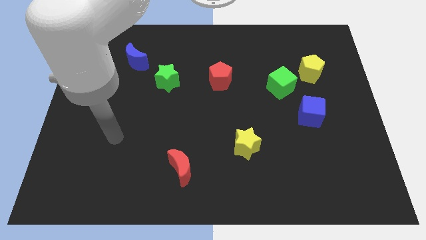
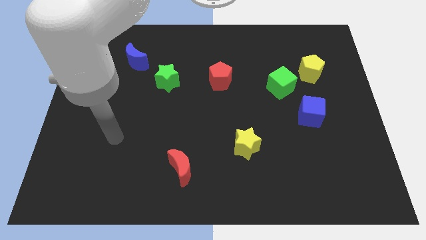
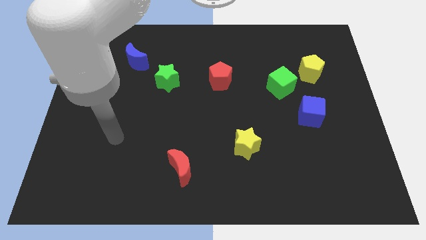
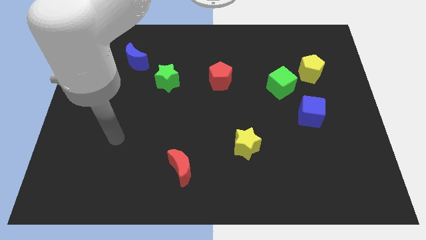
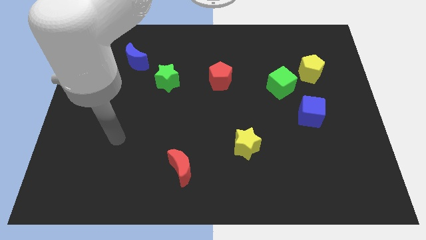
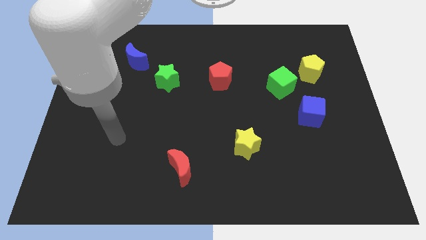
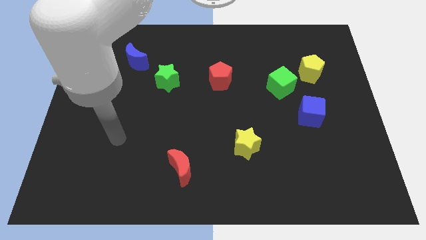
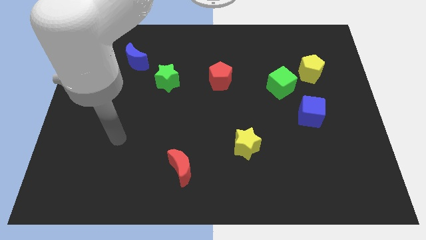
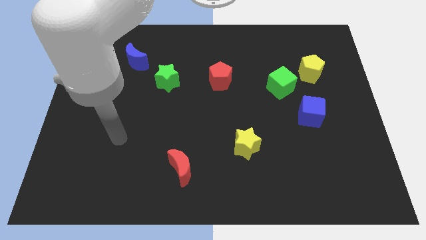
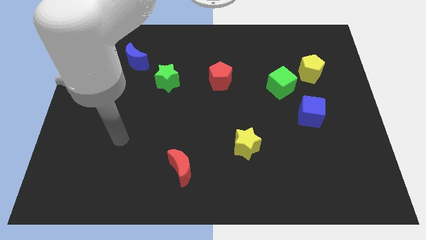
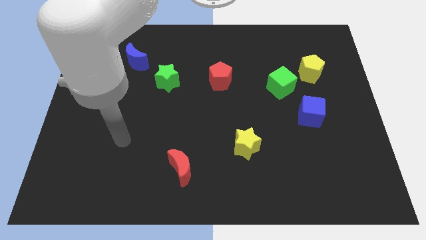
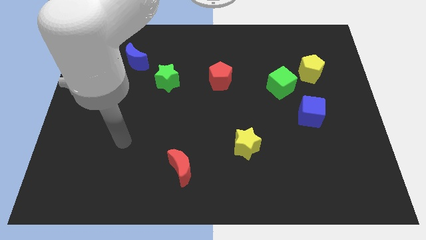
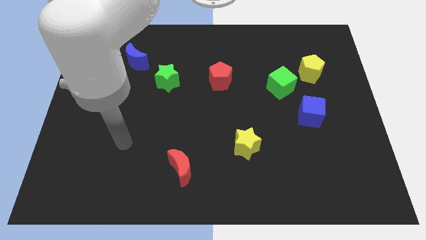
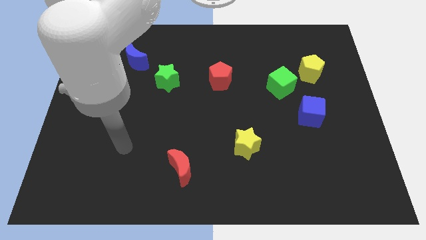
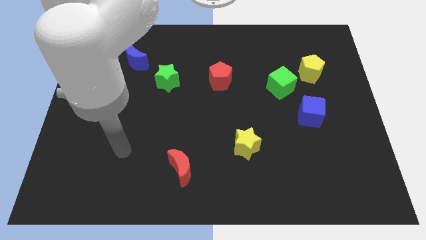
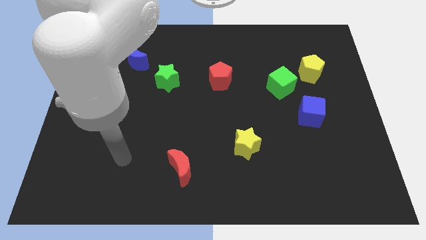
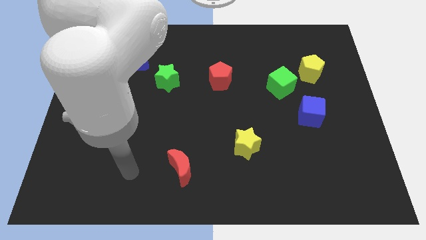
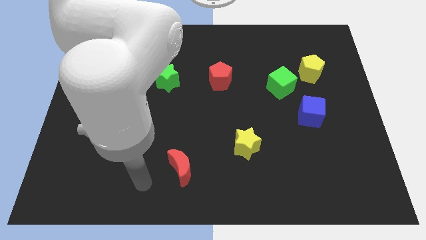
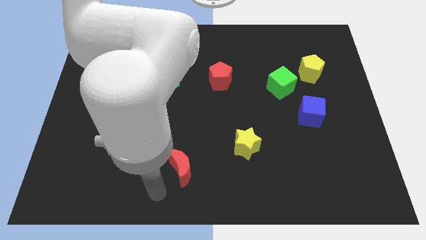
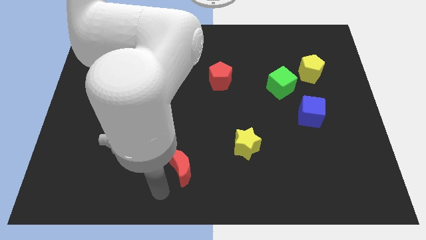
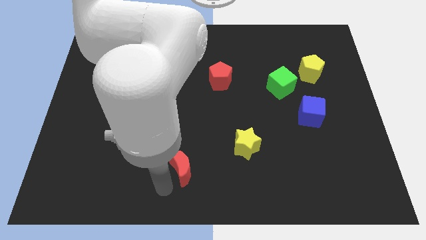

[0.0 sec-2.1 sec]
move your hand to the left of the red moon

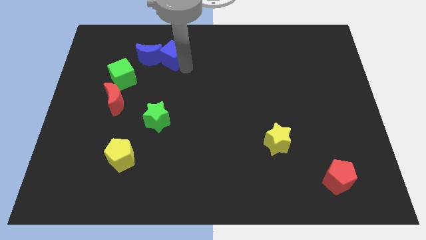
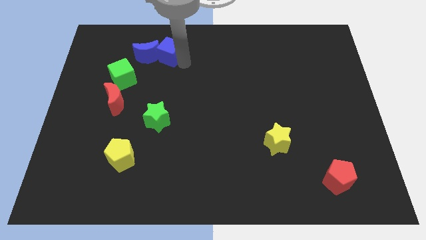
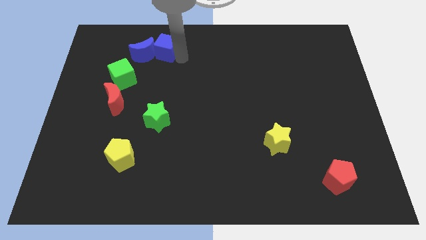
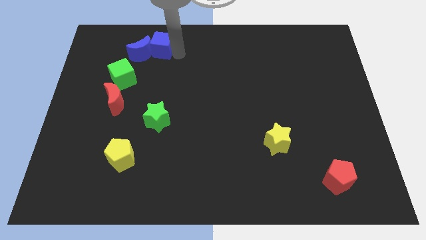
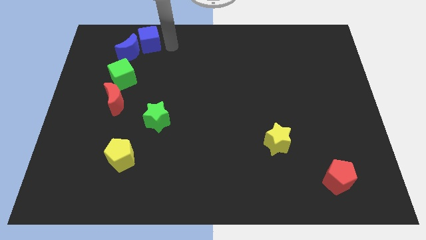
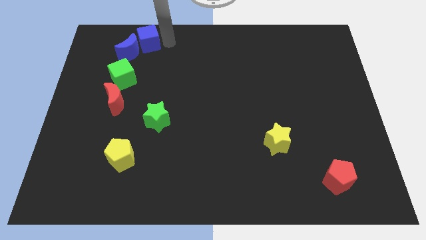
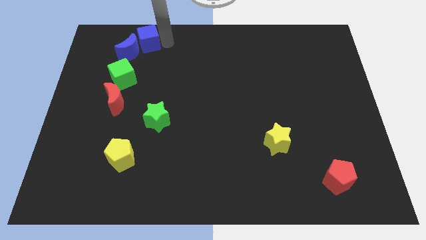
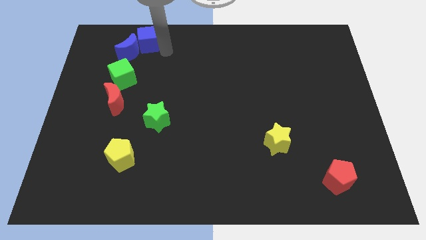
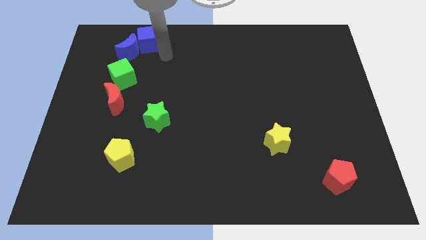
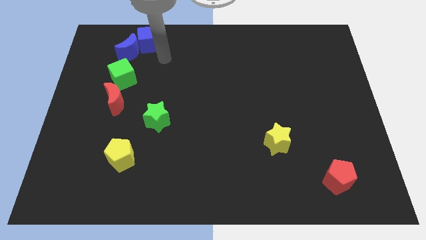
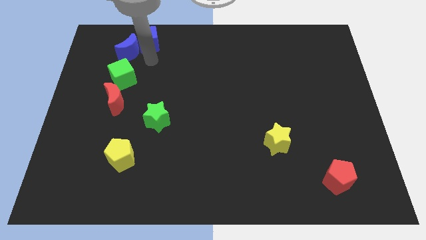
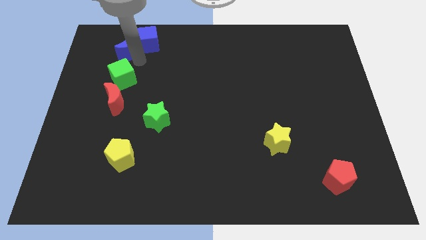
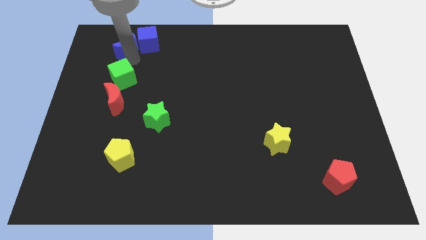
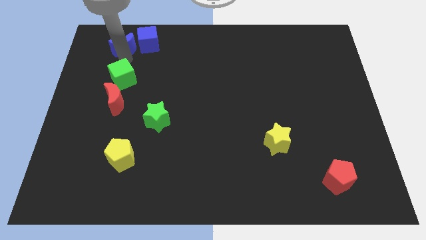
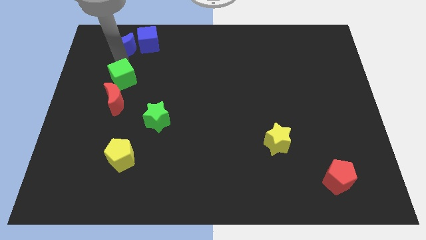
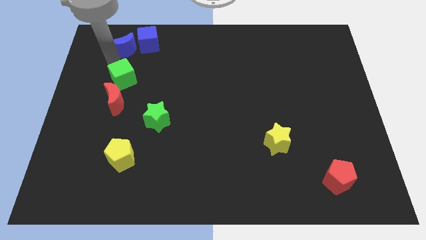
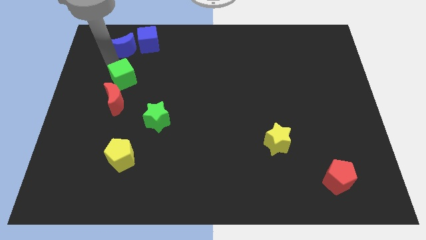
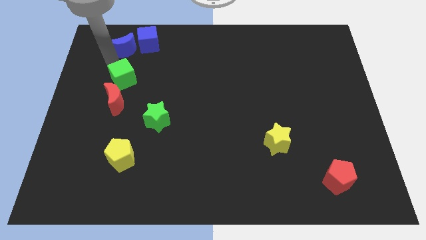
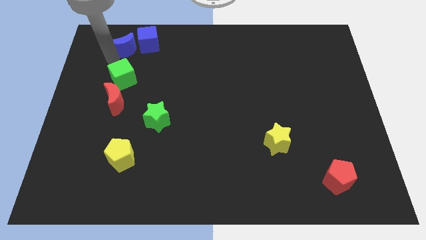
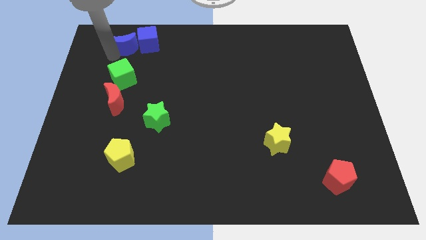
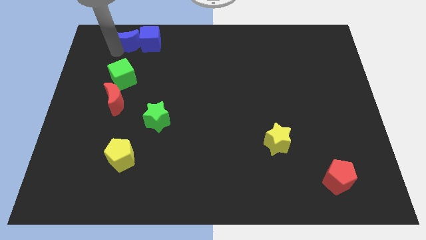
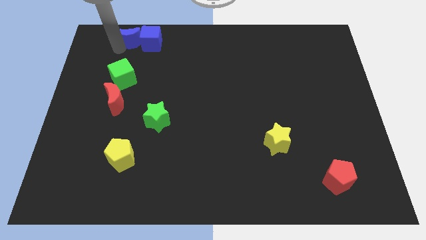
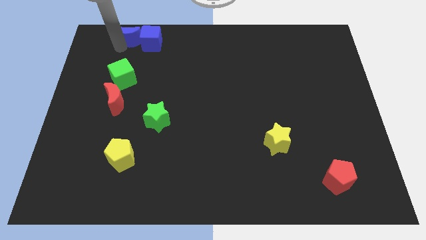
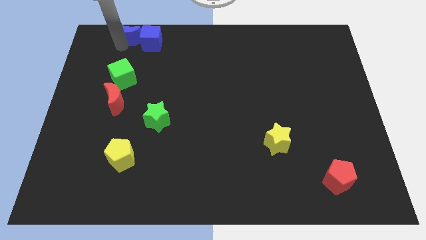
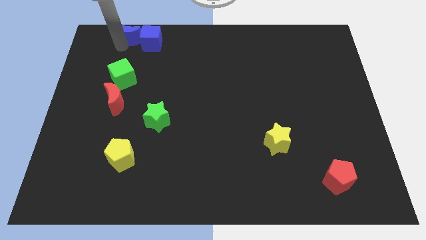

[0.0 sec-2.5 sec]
slightly push the blue moon to the top of the board

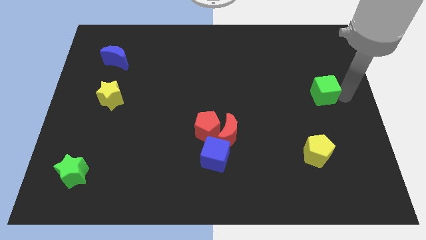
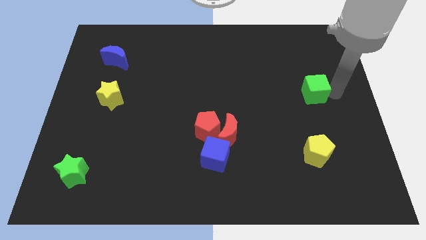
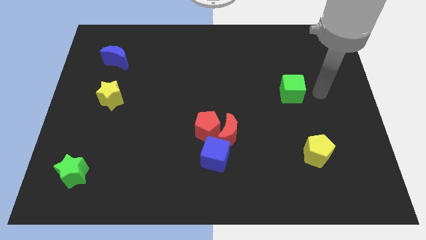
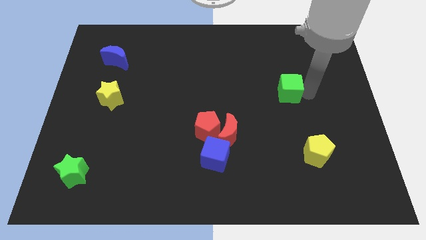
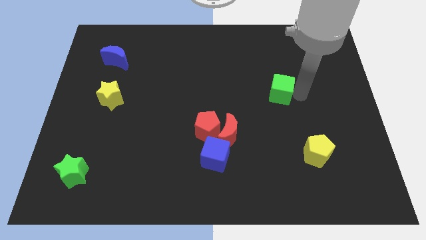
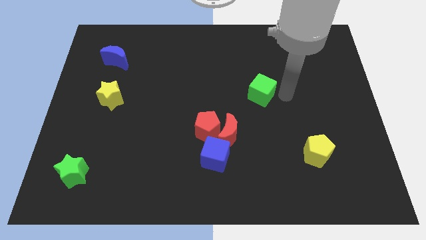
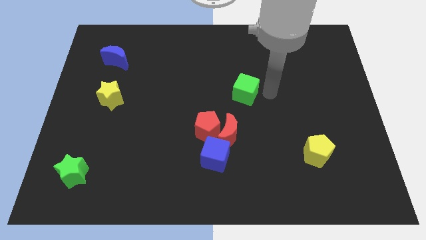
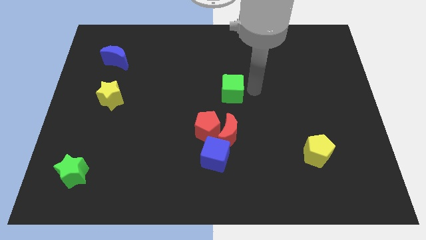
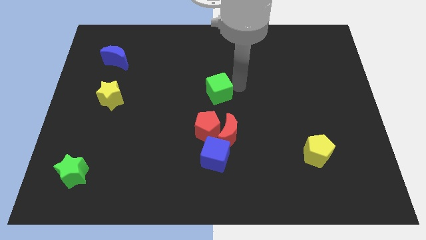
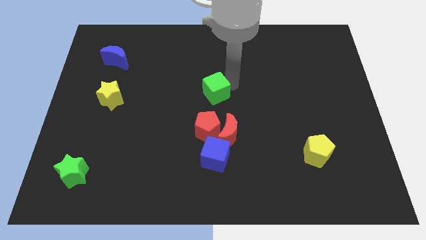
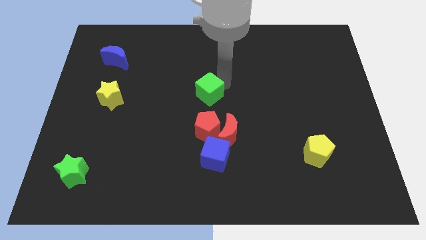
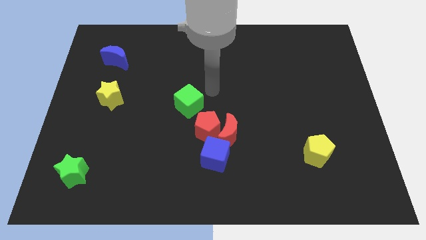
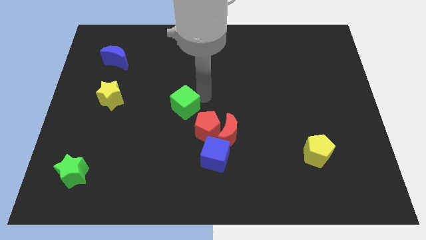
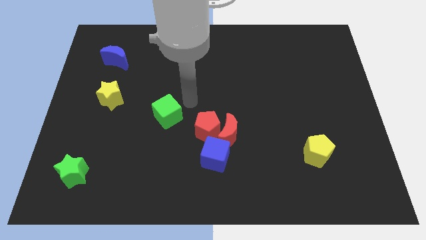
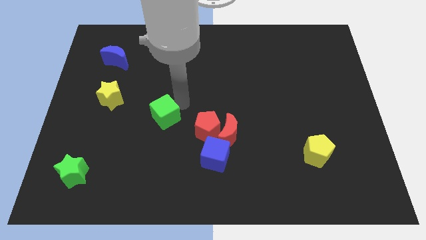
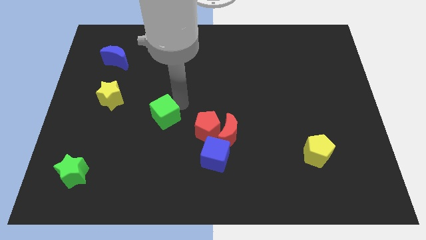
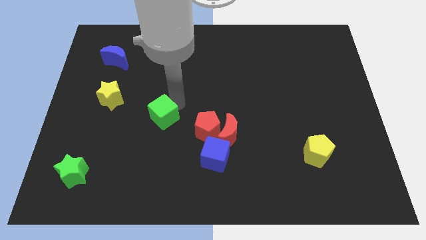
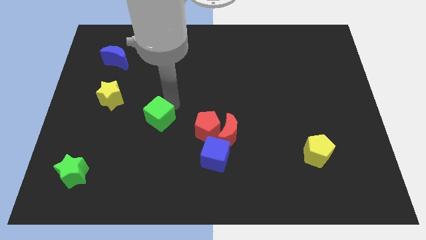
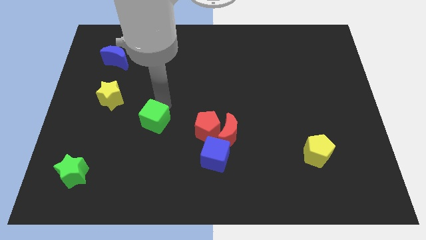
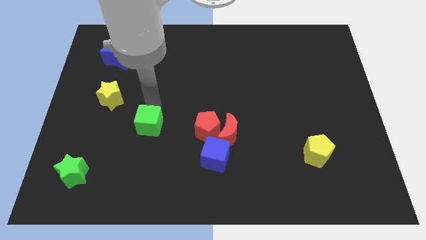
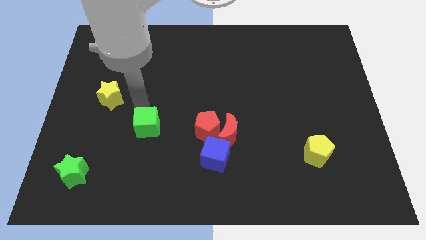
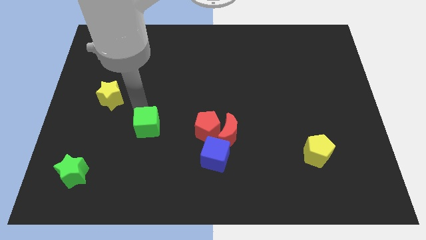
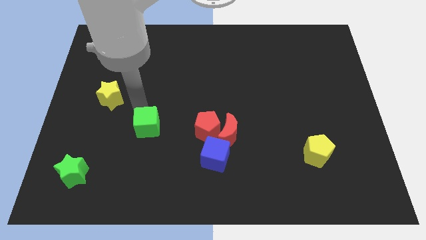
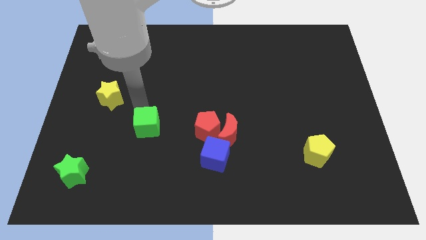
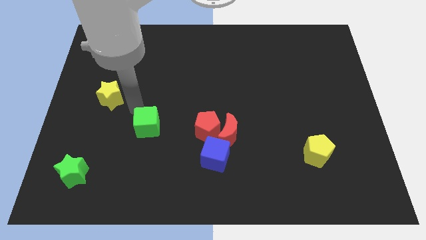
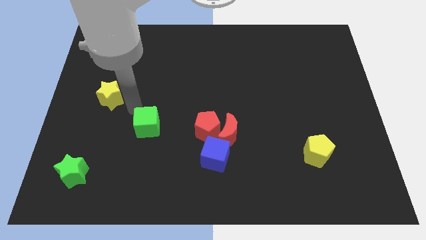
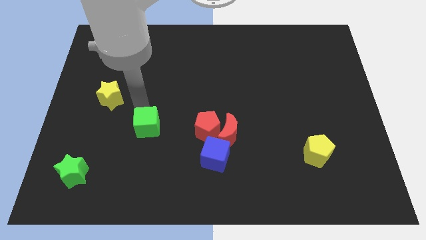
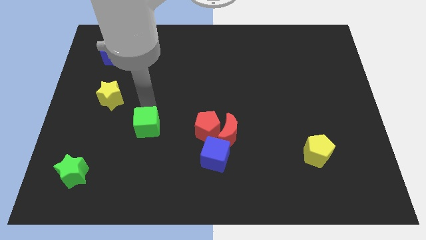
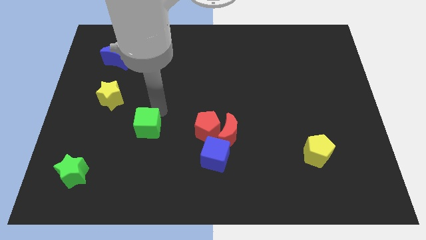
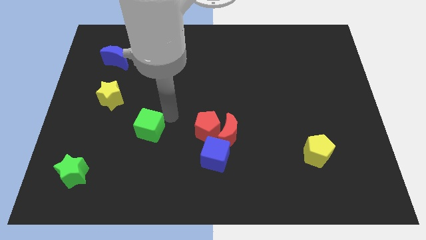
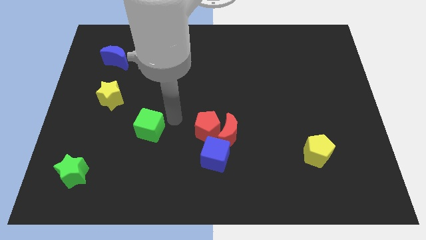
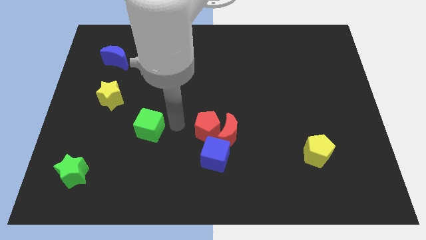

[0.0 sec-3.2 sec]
move the green cube to the left side of the red pentagon

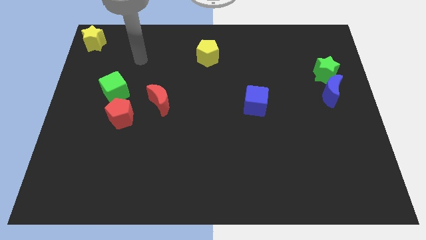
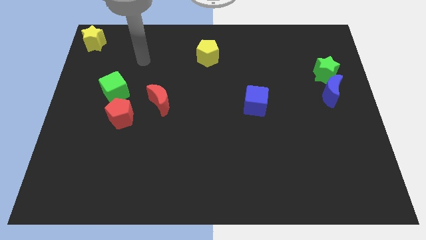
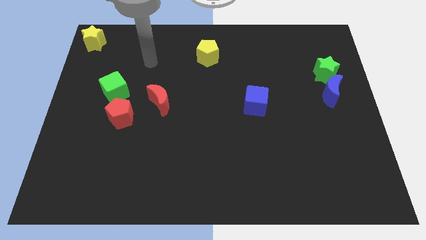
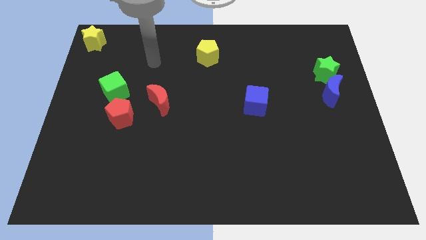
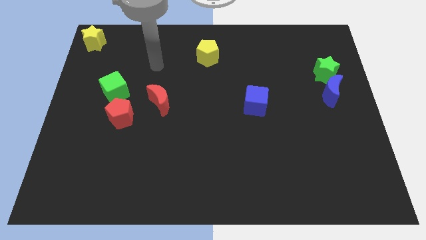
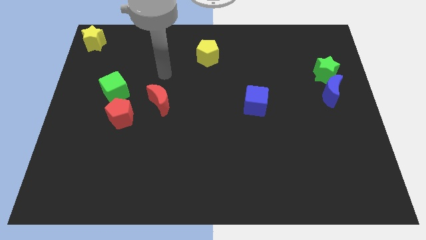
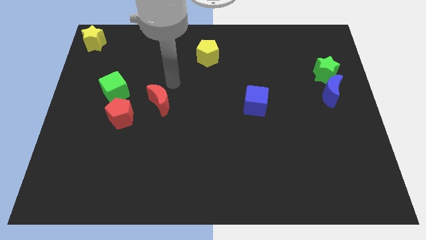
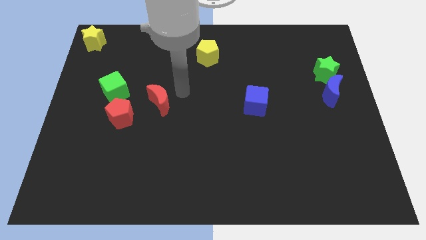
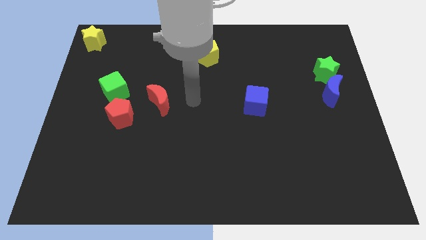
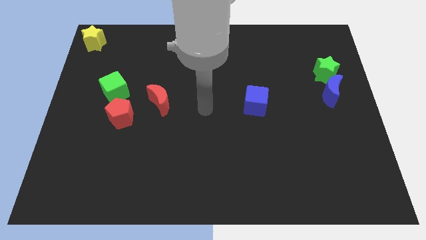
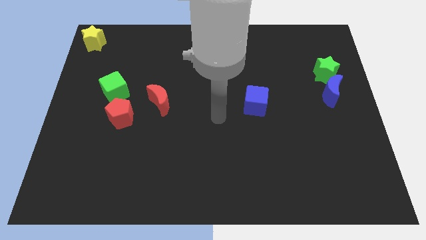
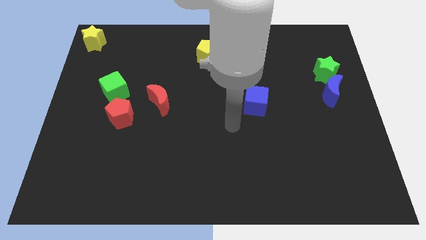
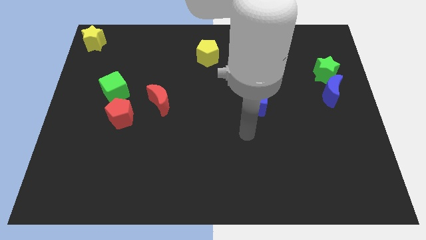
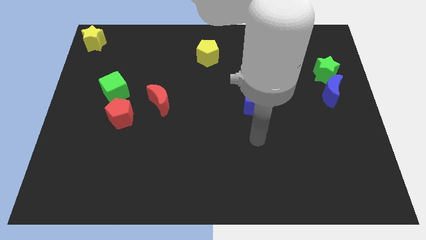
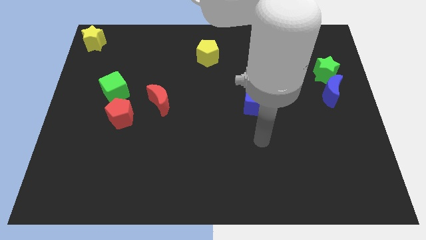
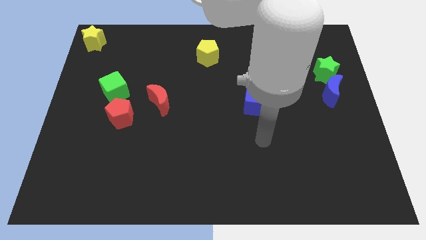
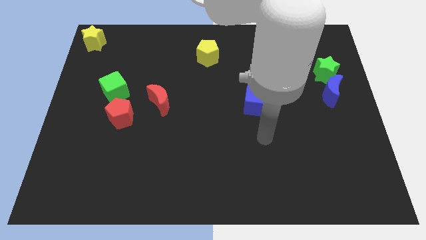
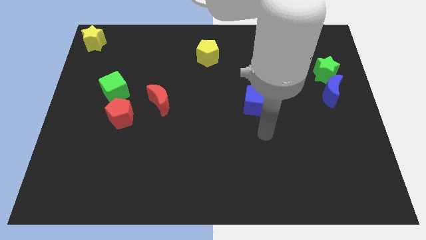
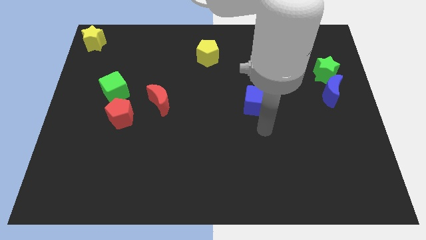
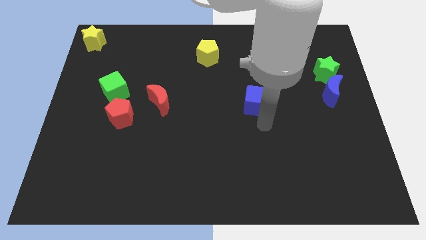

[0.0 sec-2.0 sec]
point the arm below the blue cube
